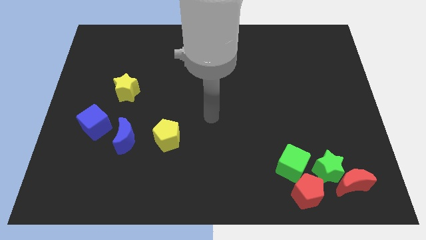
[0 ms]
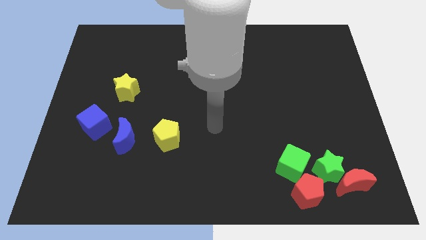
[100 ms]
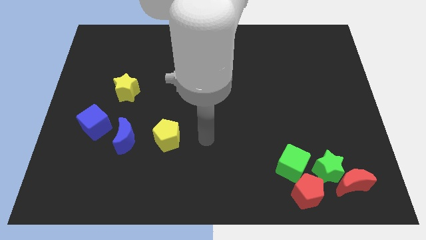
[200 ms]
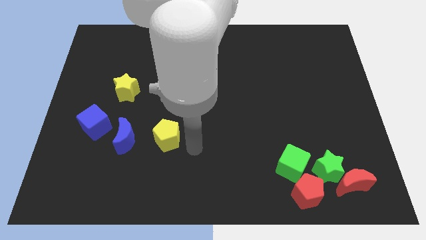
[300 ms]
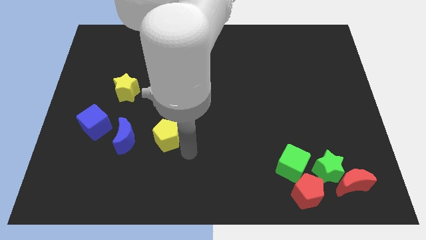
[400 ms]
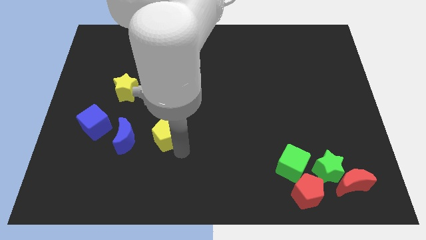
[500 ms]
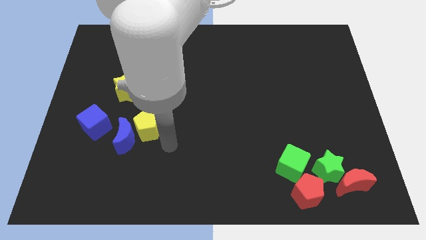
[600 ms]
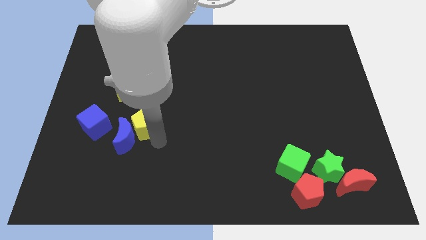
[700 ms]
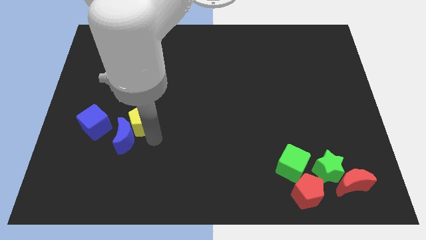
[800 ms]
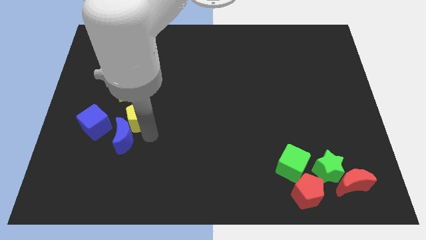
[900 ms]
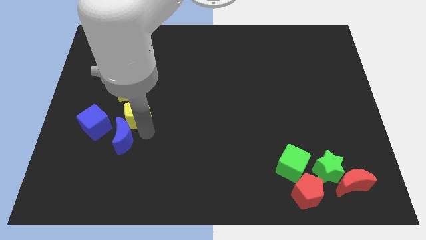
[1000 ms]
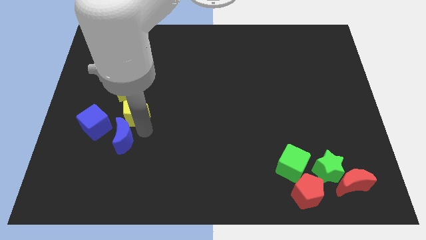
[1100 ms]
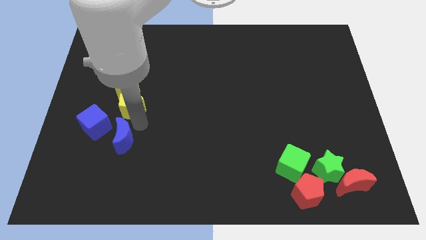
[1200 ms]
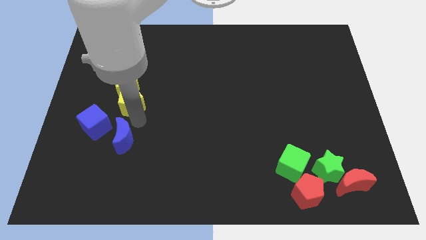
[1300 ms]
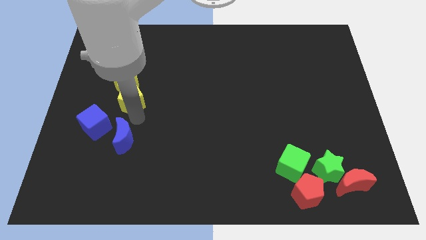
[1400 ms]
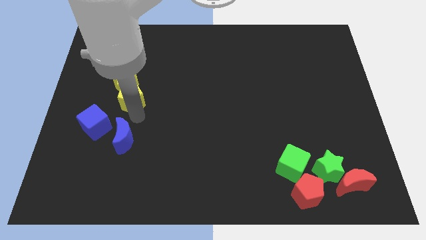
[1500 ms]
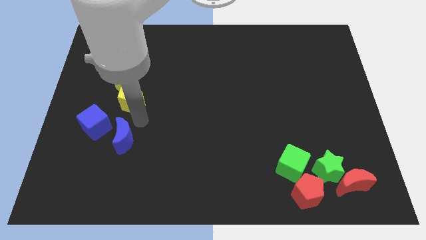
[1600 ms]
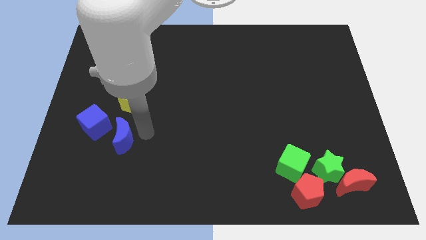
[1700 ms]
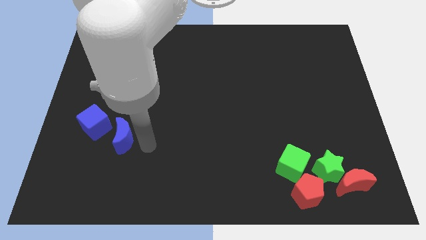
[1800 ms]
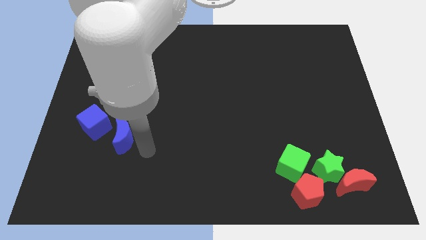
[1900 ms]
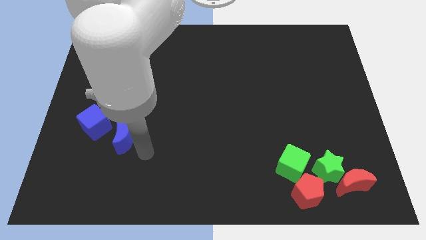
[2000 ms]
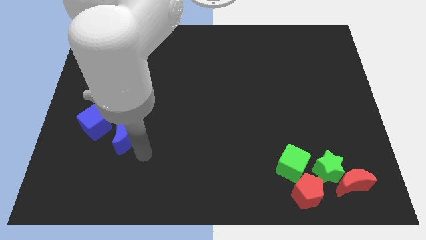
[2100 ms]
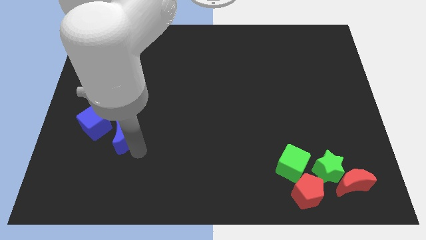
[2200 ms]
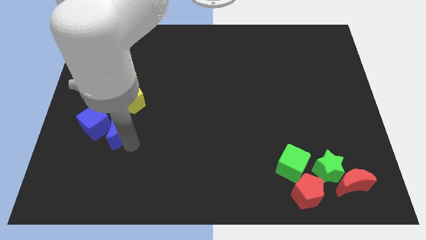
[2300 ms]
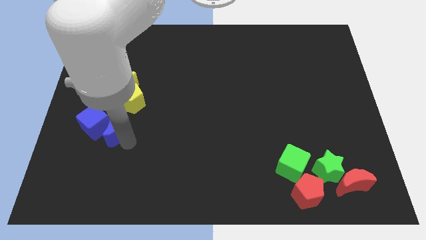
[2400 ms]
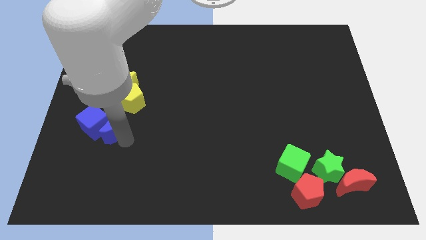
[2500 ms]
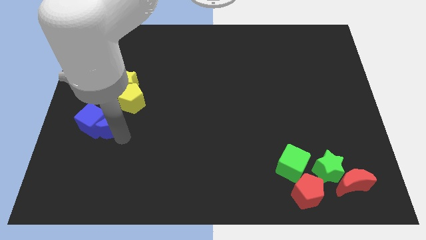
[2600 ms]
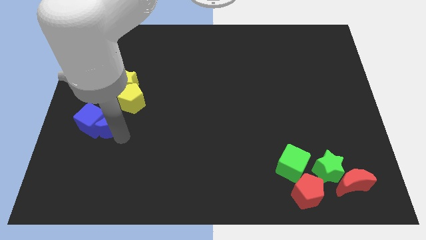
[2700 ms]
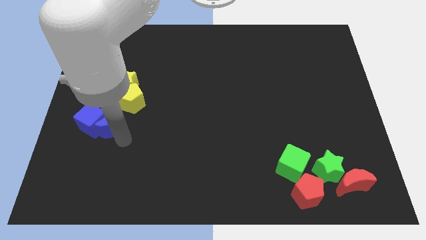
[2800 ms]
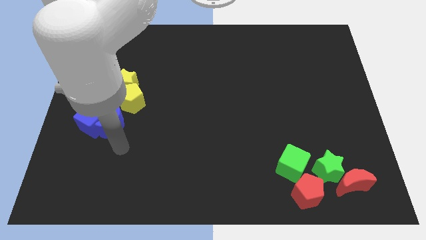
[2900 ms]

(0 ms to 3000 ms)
group up the yellow and blue blocks separately

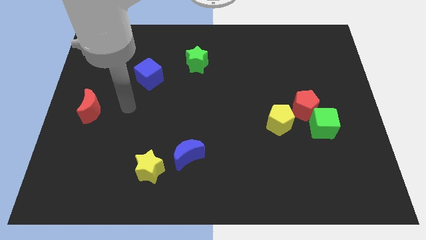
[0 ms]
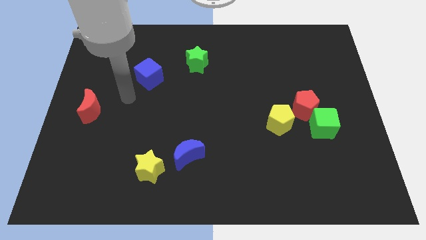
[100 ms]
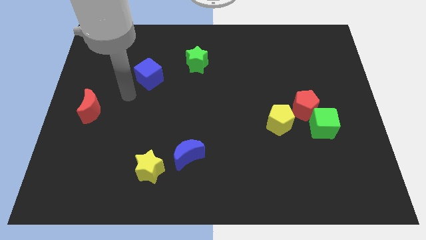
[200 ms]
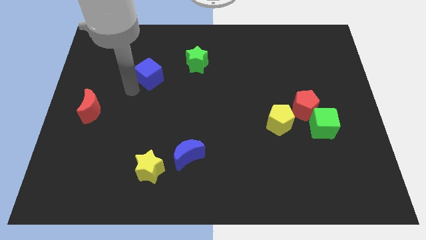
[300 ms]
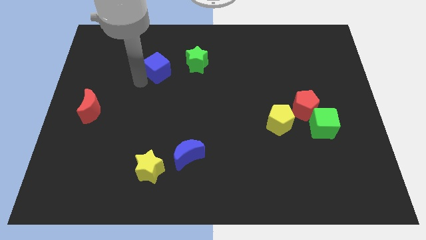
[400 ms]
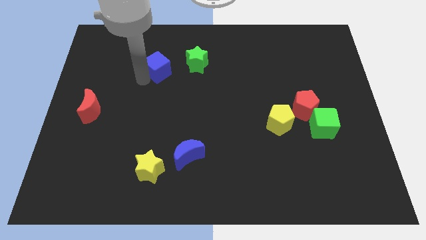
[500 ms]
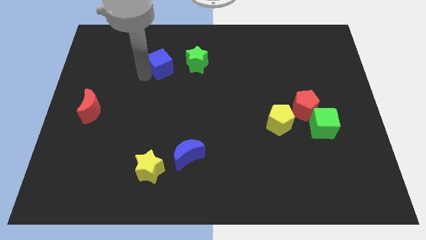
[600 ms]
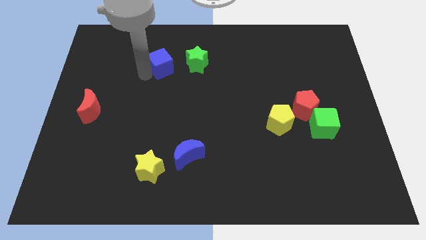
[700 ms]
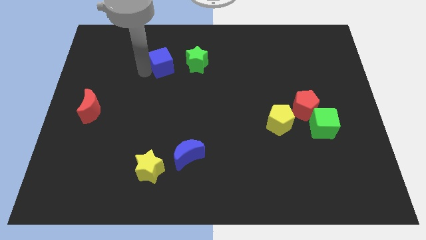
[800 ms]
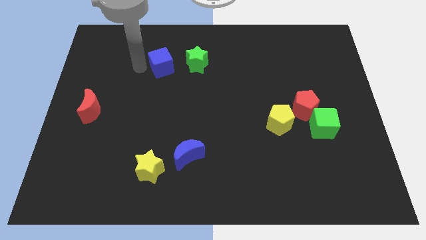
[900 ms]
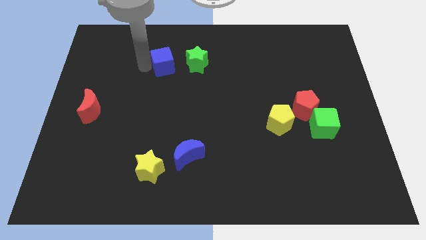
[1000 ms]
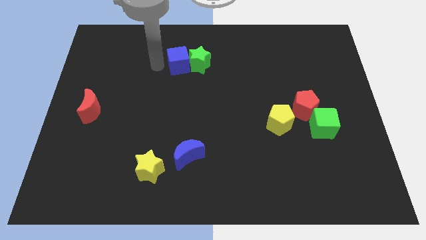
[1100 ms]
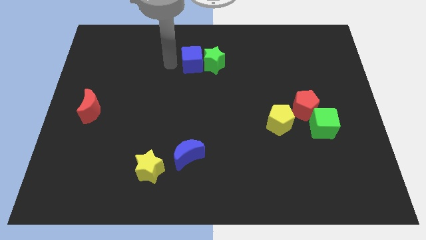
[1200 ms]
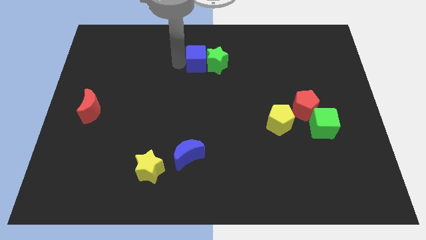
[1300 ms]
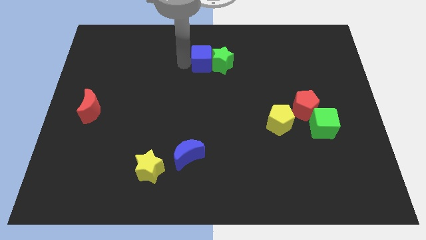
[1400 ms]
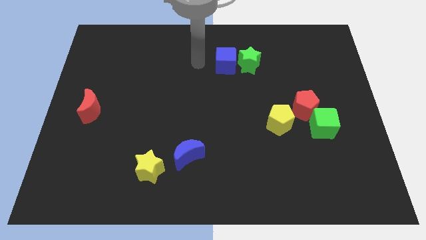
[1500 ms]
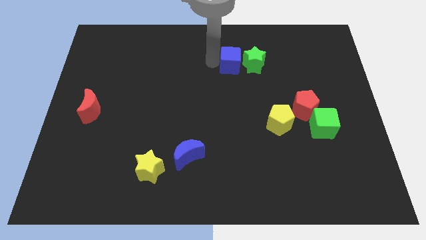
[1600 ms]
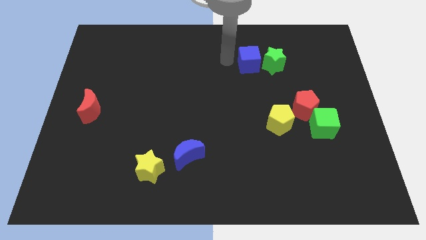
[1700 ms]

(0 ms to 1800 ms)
push the green star into the blue cube

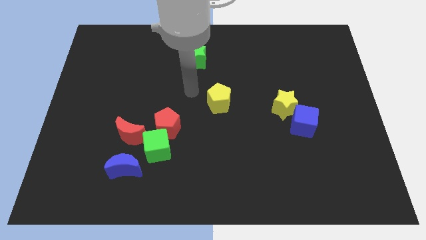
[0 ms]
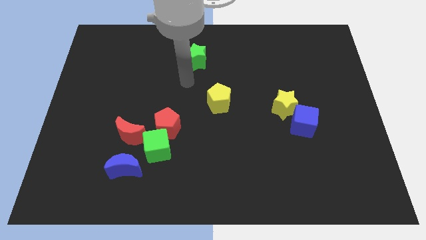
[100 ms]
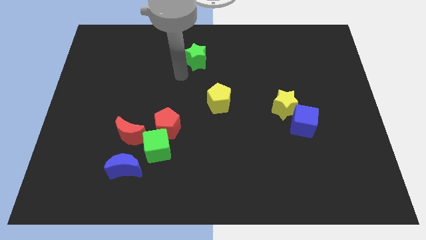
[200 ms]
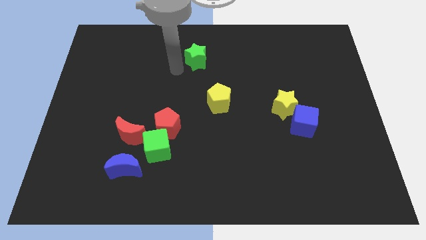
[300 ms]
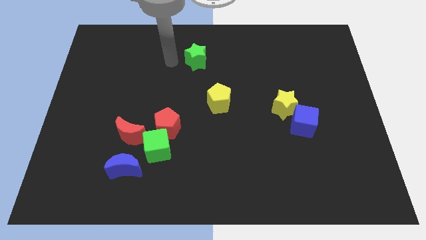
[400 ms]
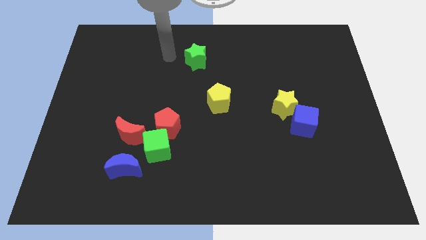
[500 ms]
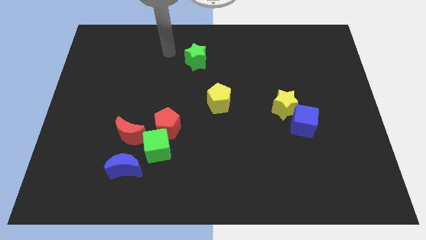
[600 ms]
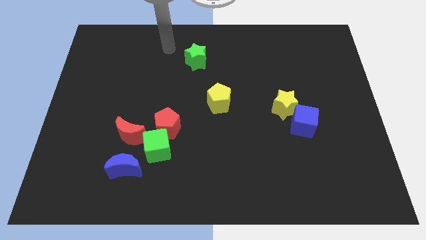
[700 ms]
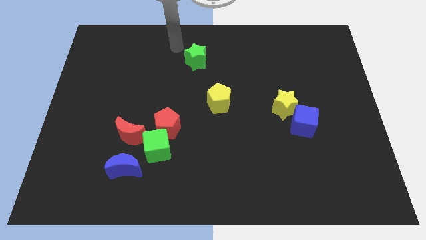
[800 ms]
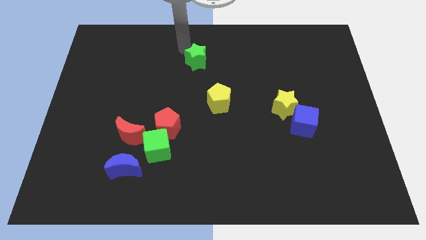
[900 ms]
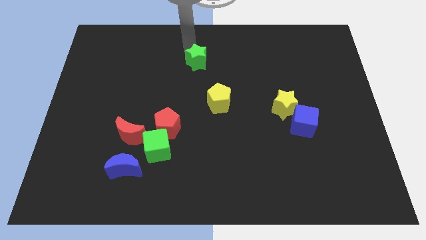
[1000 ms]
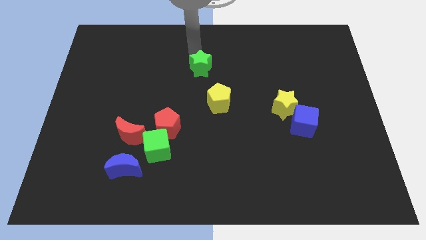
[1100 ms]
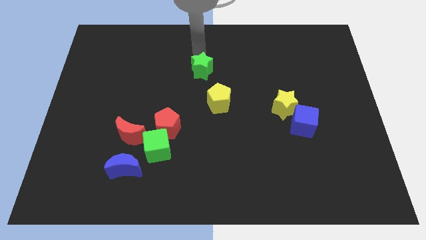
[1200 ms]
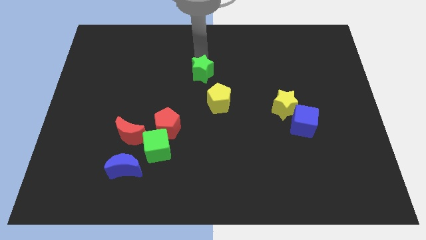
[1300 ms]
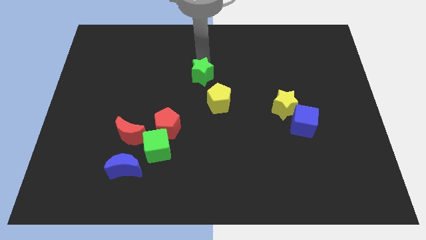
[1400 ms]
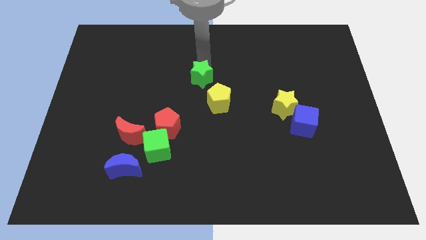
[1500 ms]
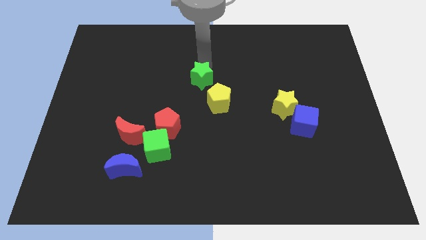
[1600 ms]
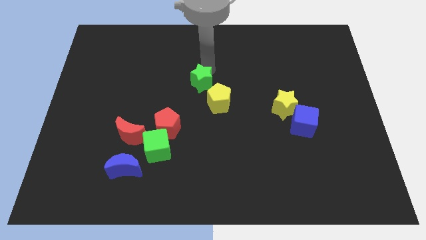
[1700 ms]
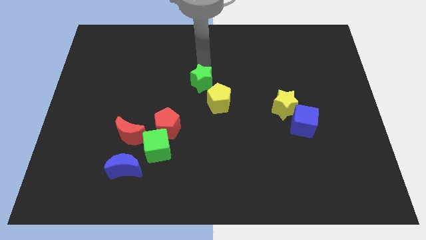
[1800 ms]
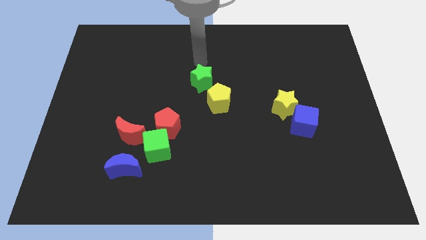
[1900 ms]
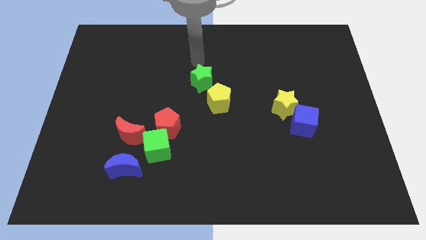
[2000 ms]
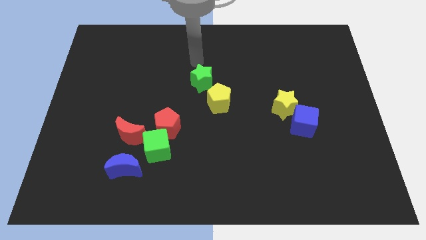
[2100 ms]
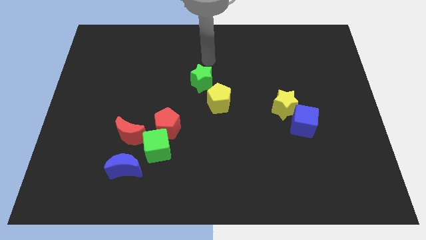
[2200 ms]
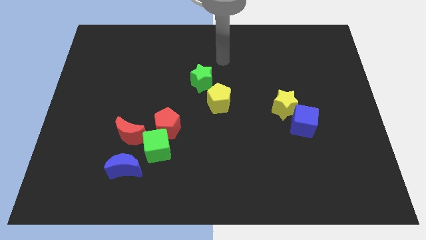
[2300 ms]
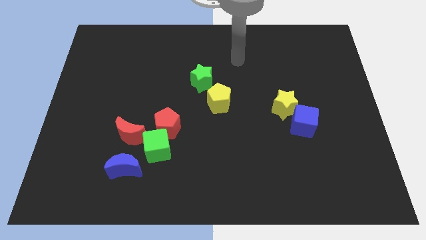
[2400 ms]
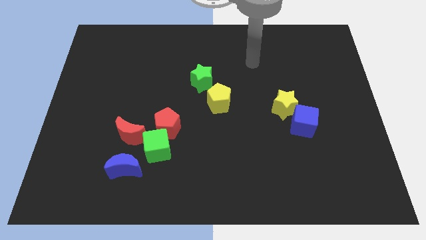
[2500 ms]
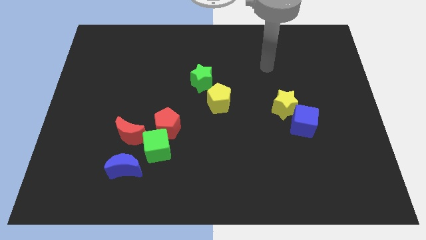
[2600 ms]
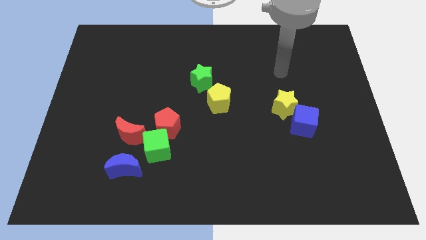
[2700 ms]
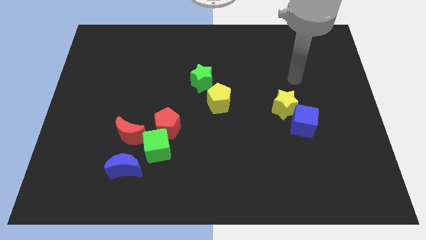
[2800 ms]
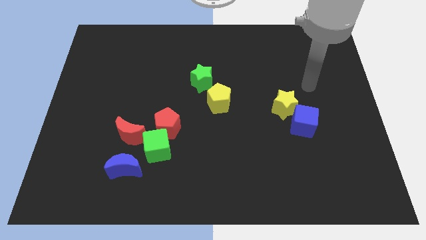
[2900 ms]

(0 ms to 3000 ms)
push the green star downward

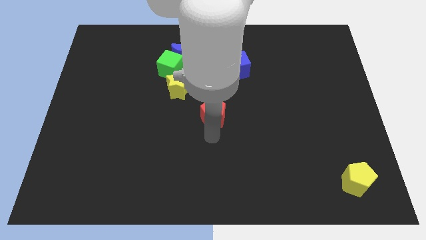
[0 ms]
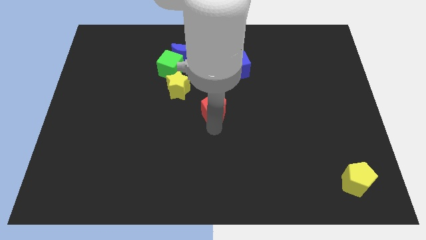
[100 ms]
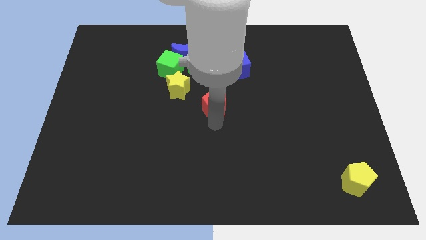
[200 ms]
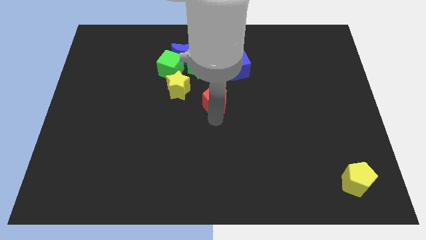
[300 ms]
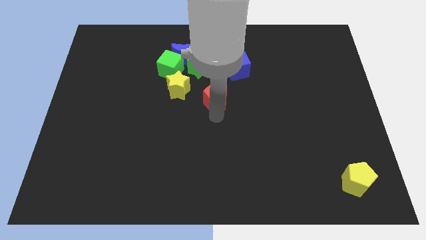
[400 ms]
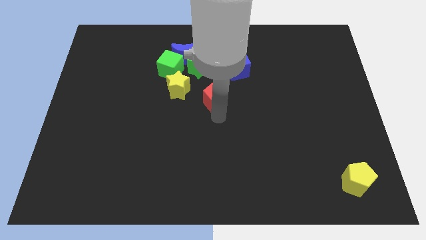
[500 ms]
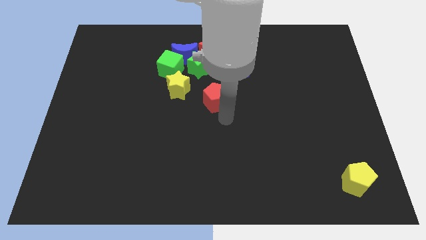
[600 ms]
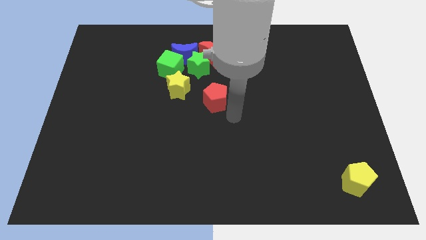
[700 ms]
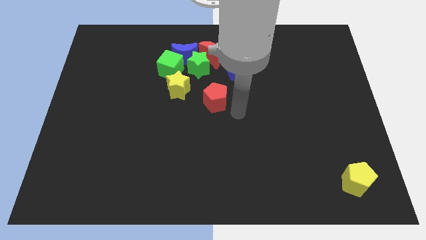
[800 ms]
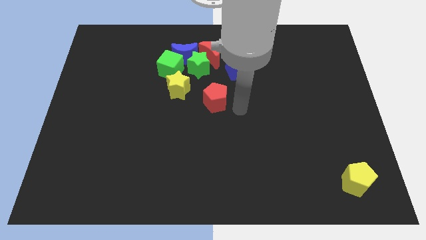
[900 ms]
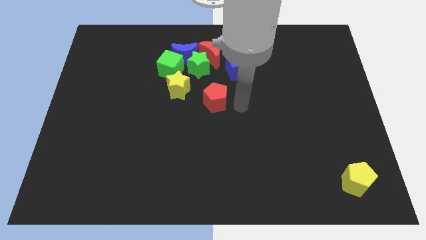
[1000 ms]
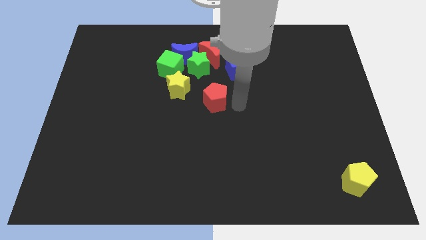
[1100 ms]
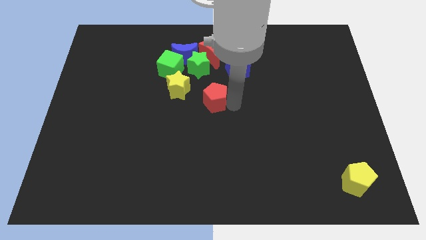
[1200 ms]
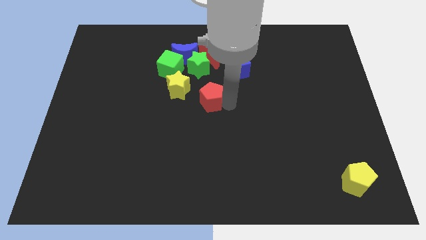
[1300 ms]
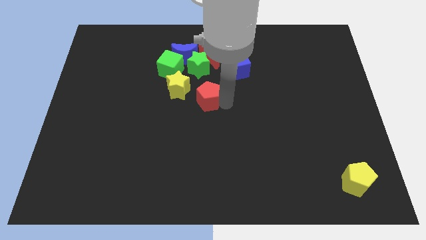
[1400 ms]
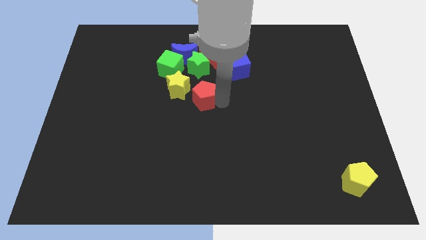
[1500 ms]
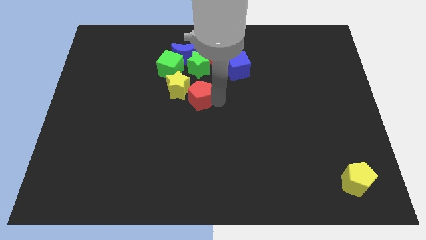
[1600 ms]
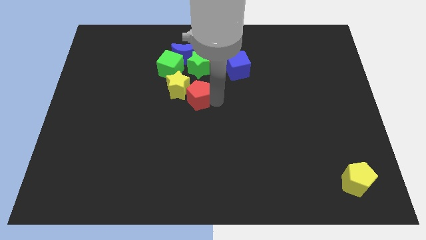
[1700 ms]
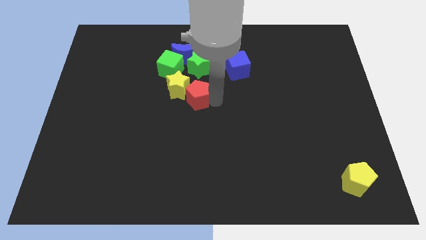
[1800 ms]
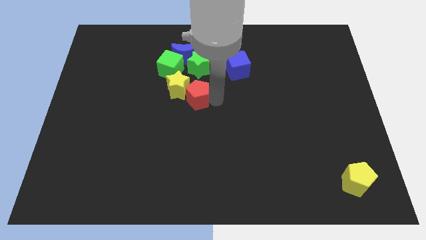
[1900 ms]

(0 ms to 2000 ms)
place red pentagon to the right of yellow star
